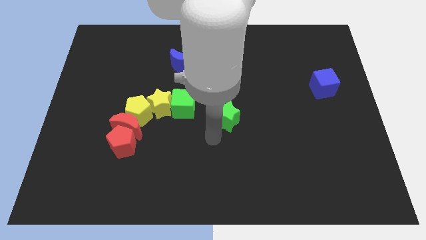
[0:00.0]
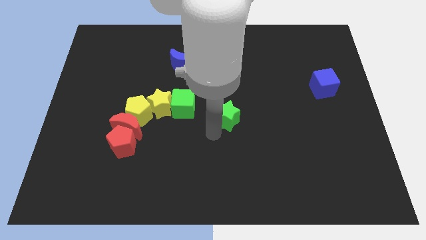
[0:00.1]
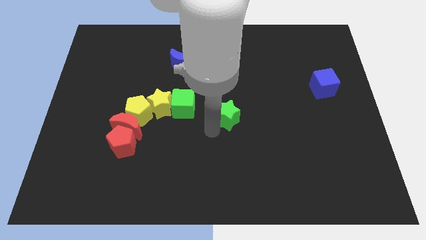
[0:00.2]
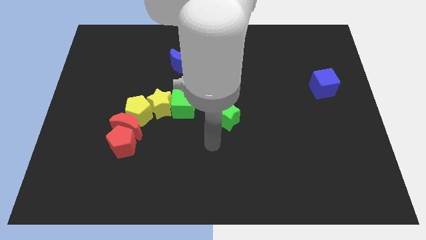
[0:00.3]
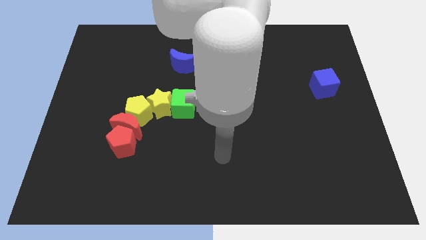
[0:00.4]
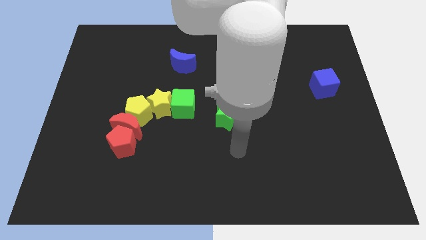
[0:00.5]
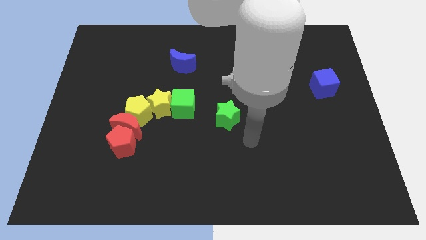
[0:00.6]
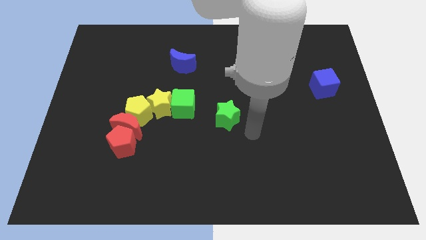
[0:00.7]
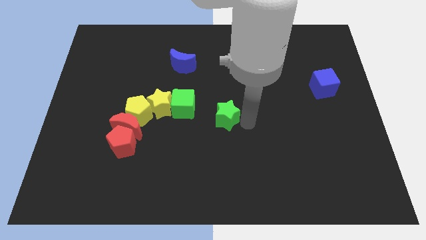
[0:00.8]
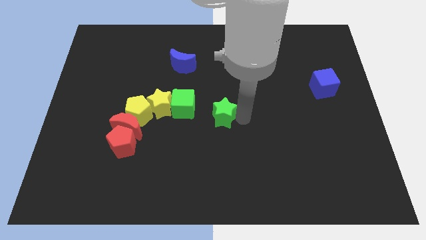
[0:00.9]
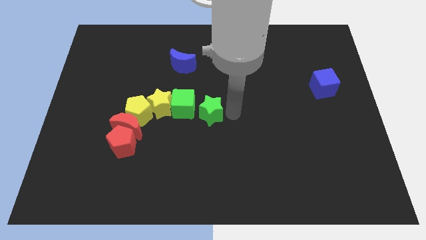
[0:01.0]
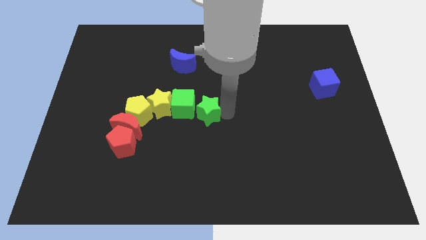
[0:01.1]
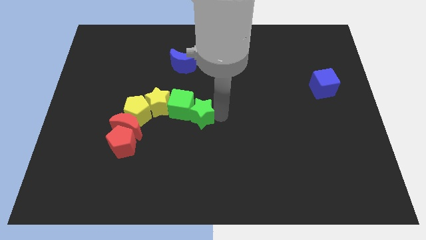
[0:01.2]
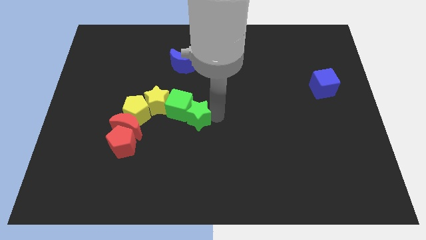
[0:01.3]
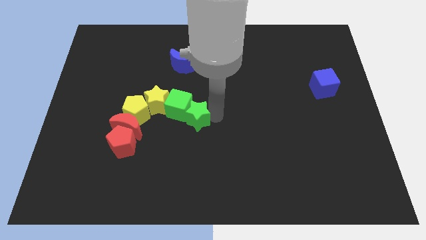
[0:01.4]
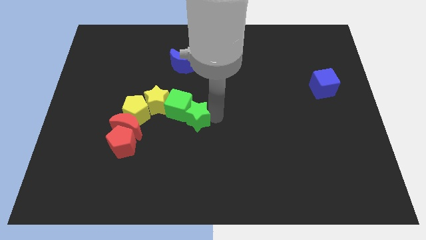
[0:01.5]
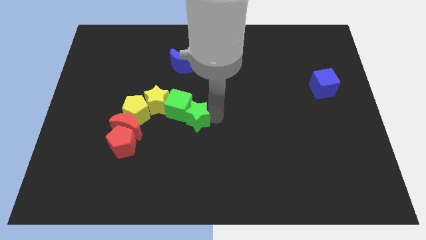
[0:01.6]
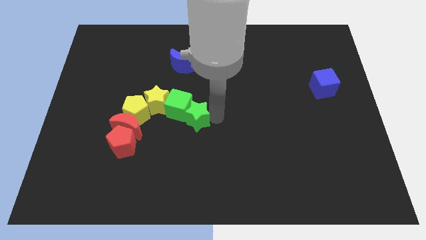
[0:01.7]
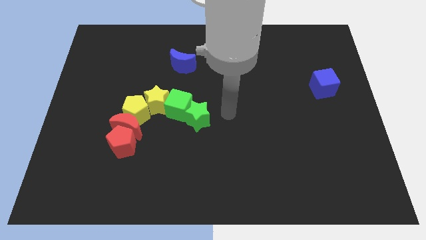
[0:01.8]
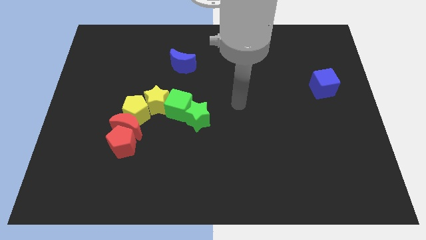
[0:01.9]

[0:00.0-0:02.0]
move the green star close to the green cube

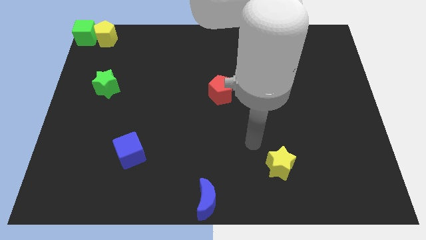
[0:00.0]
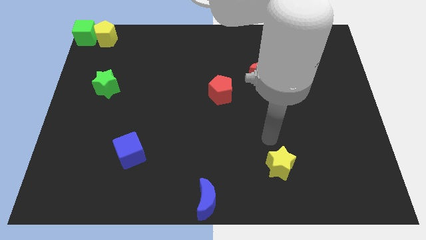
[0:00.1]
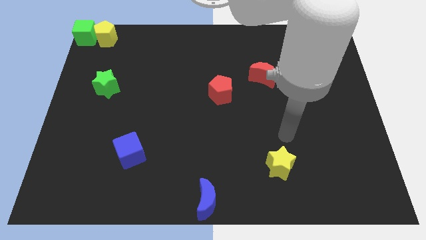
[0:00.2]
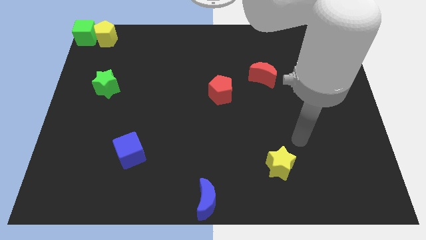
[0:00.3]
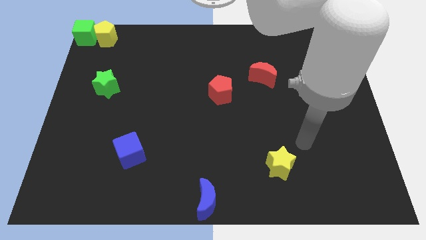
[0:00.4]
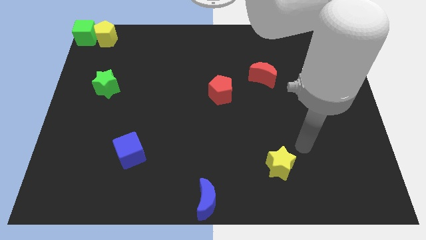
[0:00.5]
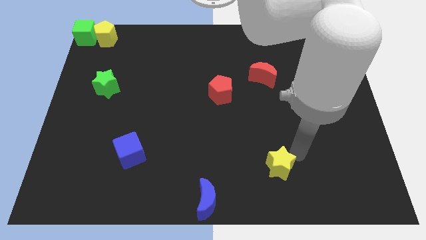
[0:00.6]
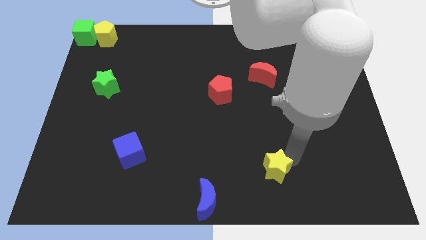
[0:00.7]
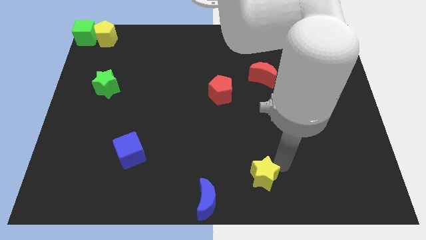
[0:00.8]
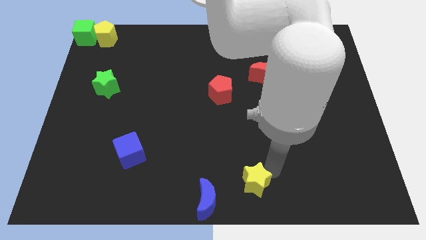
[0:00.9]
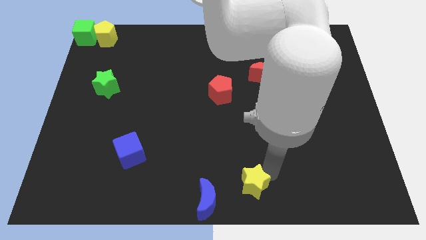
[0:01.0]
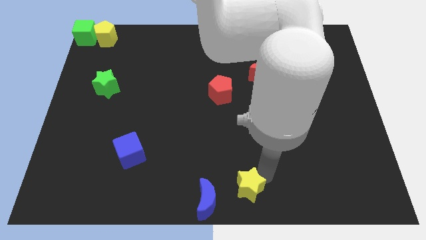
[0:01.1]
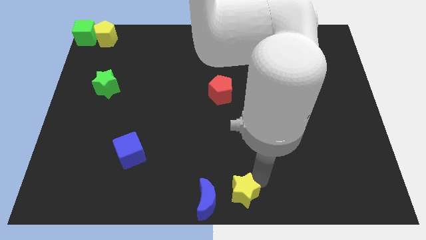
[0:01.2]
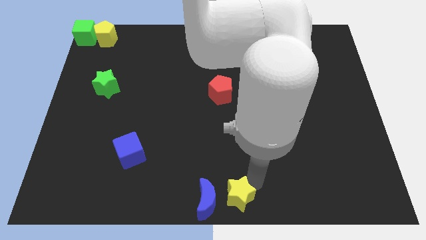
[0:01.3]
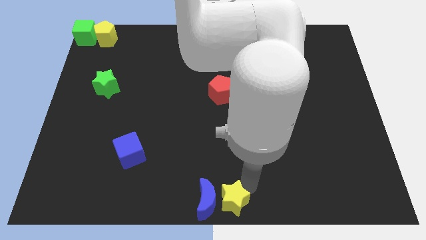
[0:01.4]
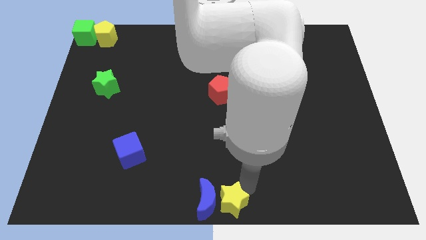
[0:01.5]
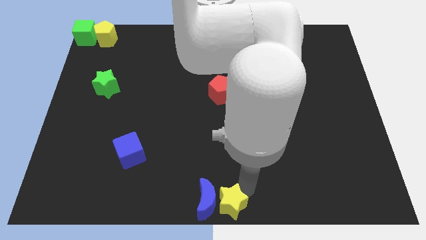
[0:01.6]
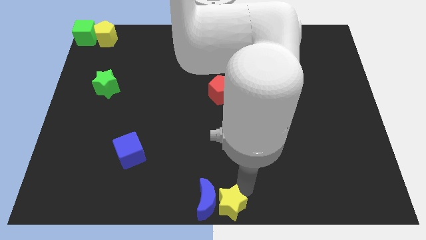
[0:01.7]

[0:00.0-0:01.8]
push the yellow star to the right of the blue crescent

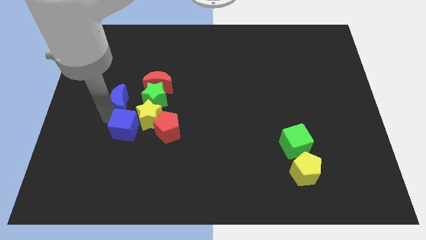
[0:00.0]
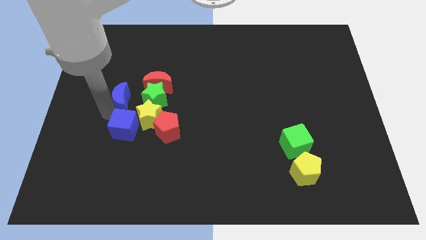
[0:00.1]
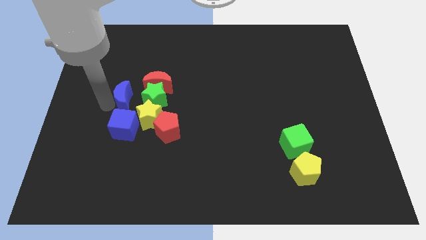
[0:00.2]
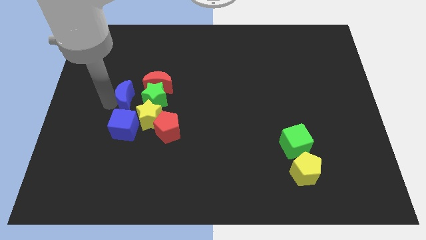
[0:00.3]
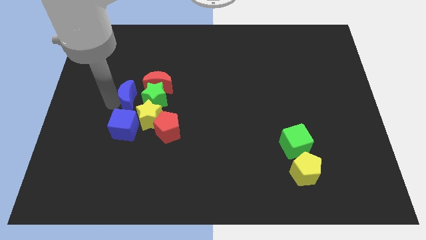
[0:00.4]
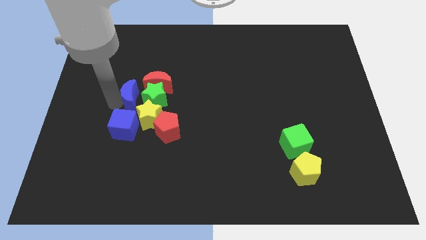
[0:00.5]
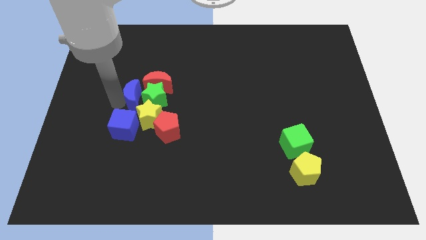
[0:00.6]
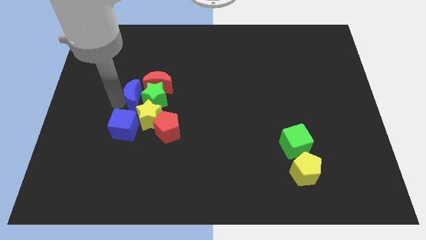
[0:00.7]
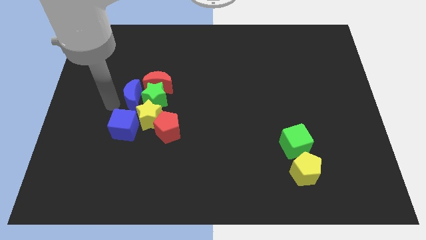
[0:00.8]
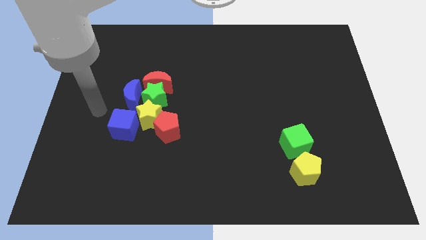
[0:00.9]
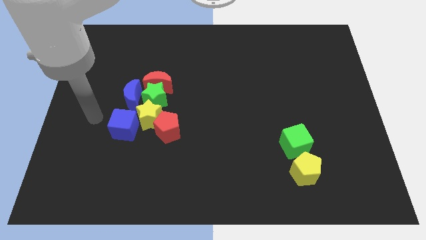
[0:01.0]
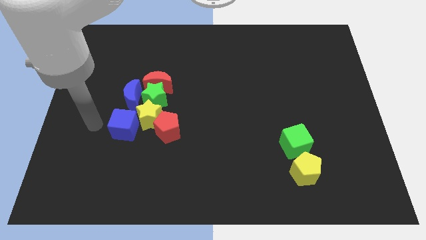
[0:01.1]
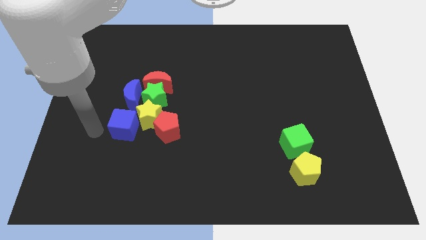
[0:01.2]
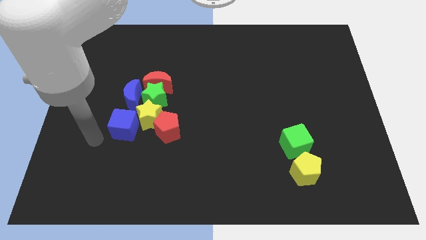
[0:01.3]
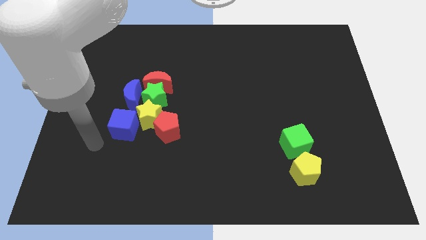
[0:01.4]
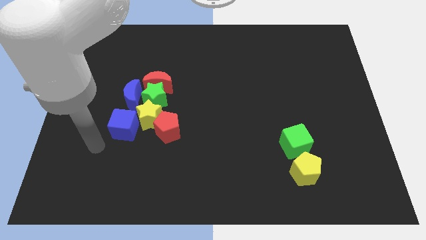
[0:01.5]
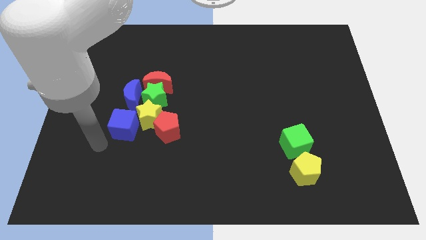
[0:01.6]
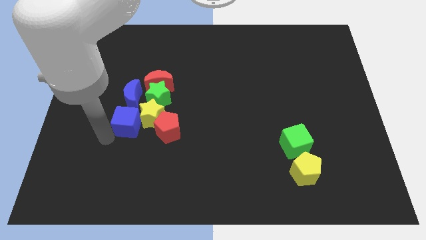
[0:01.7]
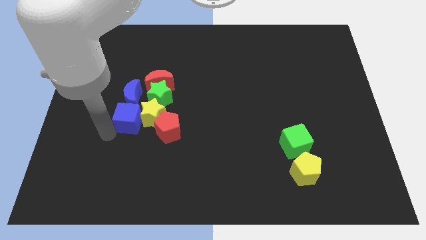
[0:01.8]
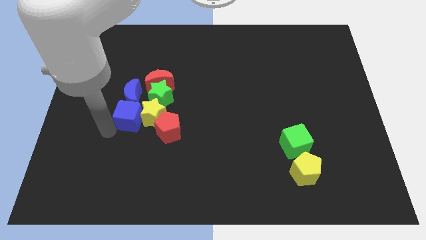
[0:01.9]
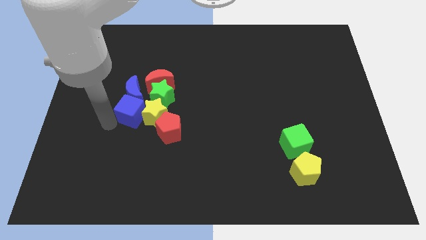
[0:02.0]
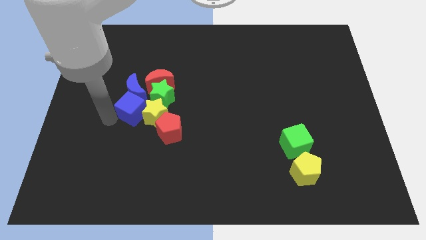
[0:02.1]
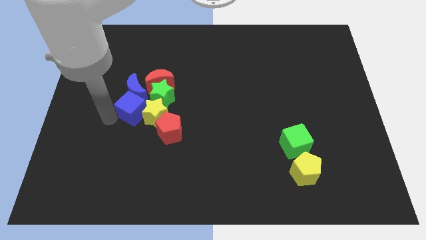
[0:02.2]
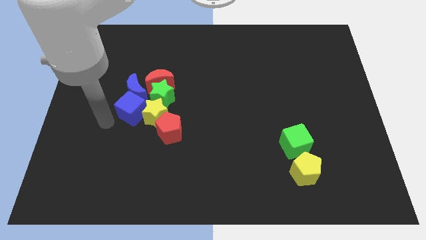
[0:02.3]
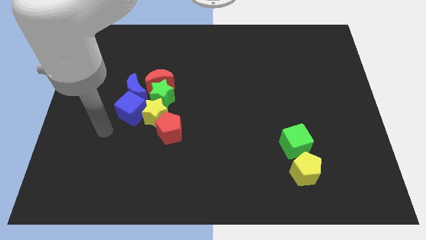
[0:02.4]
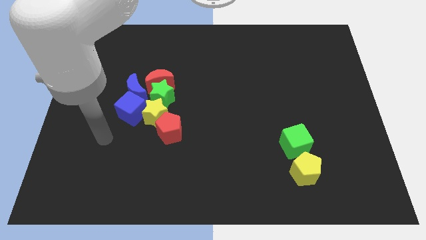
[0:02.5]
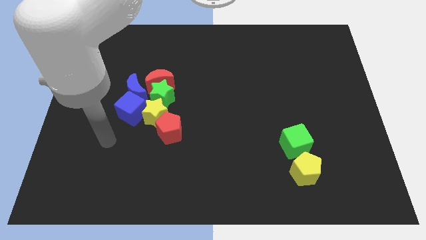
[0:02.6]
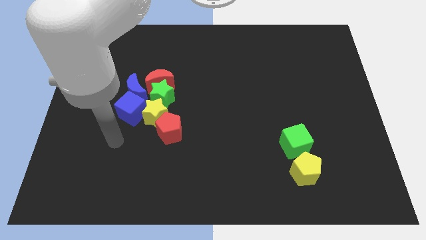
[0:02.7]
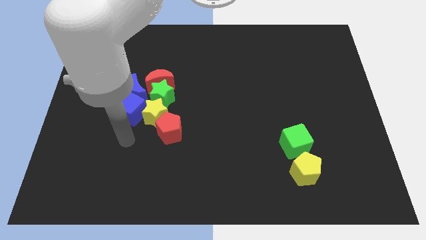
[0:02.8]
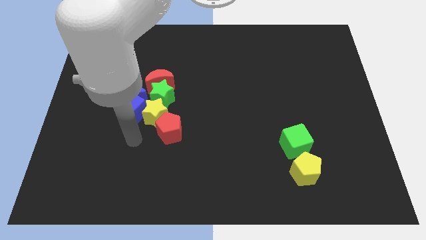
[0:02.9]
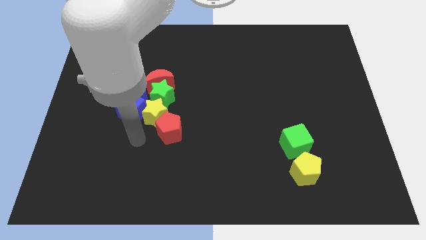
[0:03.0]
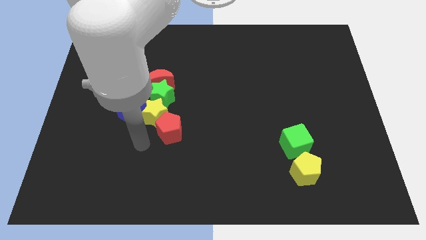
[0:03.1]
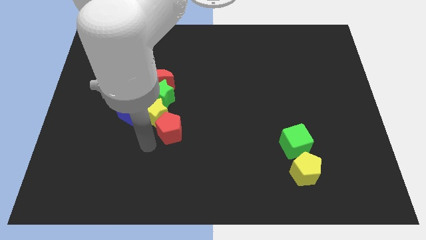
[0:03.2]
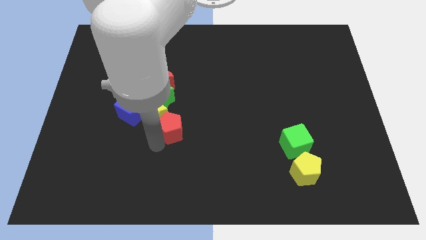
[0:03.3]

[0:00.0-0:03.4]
add both the blue blocks to the group of blocks at the center left of the board

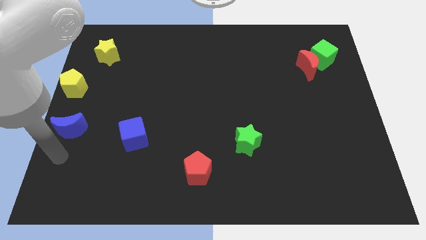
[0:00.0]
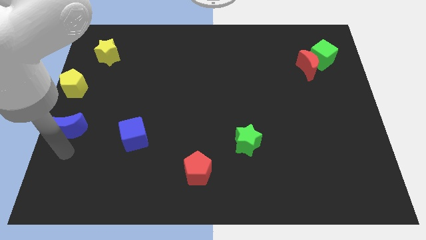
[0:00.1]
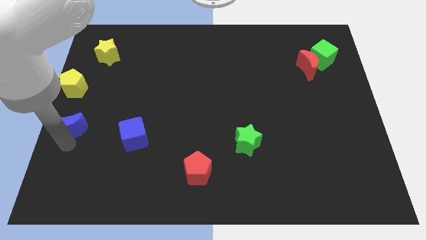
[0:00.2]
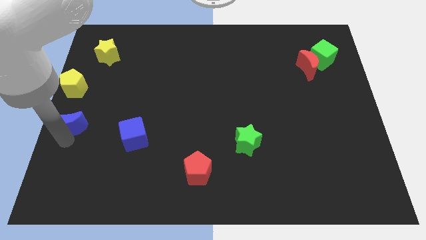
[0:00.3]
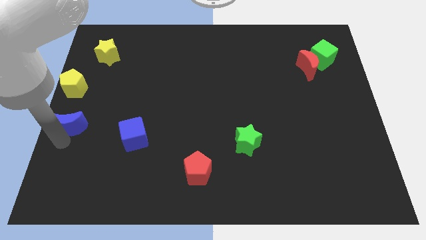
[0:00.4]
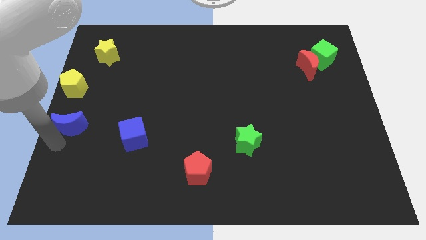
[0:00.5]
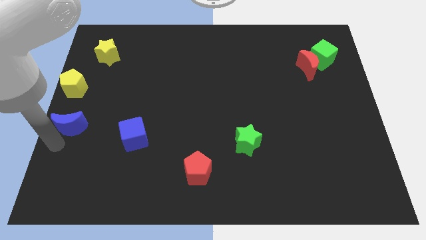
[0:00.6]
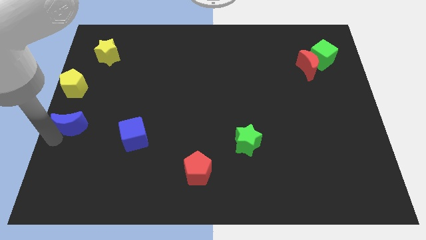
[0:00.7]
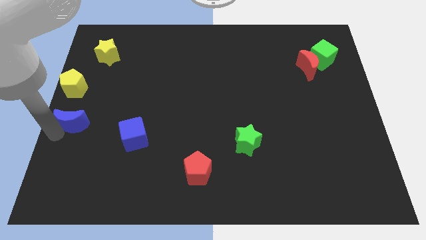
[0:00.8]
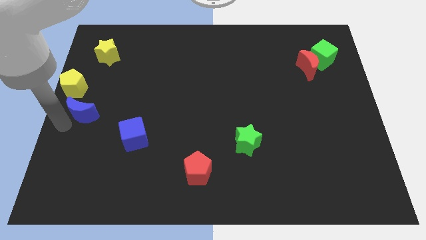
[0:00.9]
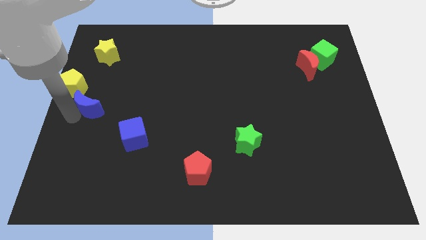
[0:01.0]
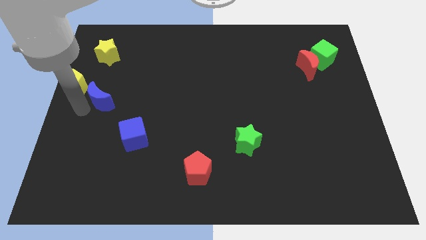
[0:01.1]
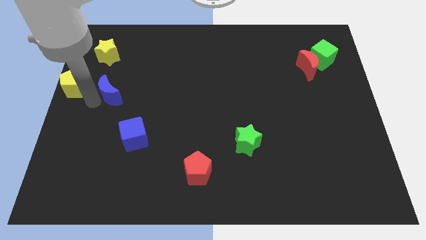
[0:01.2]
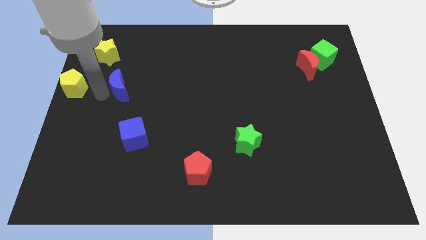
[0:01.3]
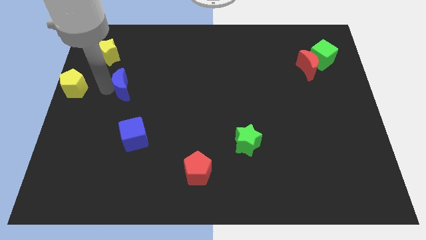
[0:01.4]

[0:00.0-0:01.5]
move blue crescent diagonally in between yellow star and blue cube

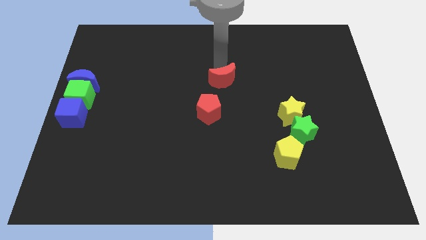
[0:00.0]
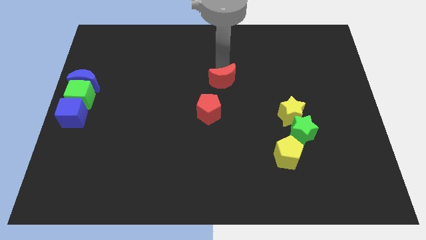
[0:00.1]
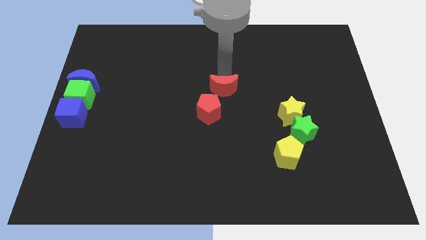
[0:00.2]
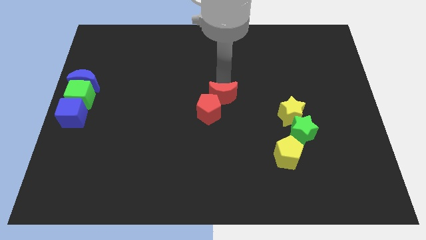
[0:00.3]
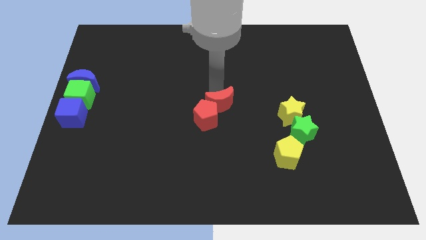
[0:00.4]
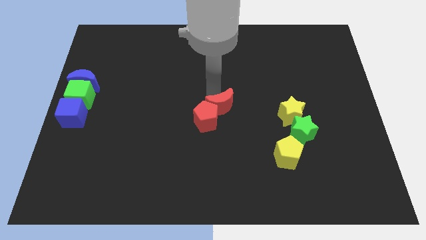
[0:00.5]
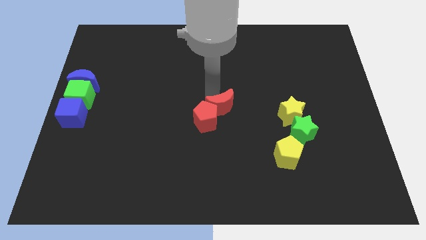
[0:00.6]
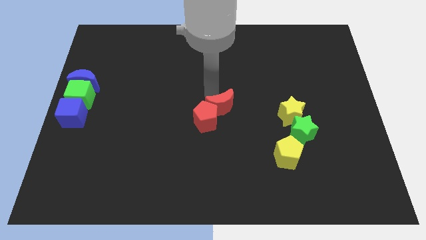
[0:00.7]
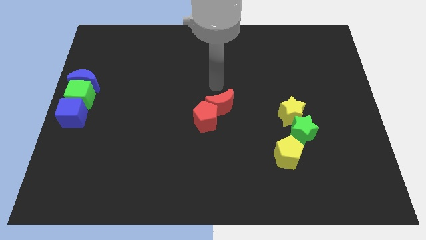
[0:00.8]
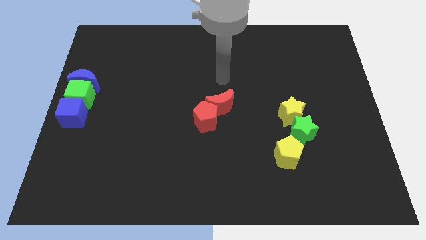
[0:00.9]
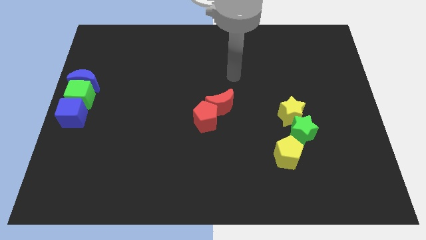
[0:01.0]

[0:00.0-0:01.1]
push the red moon into the red pentagon
